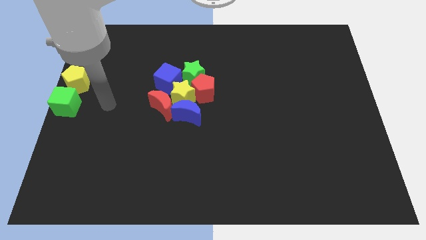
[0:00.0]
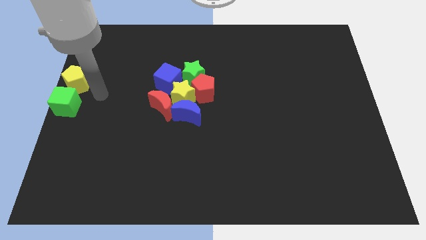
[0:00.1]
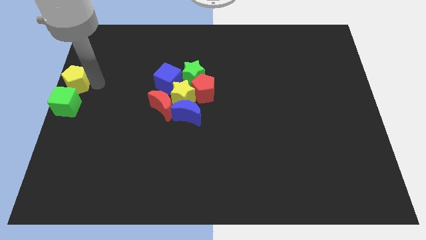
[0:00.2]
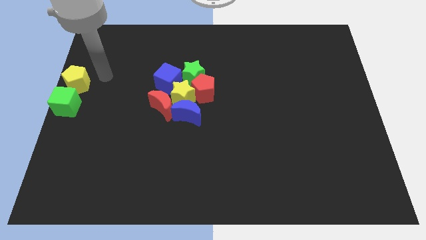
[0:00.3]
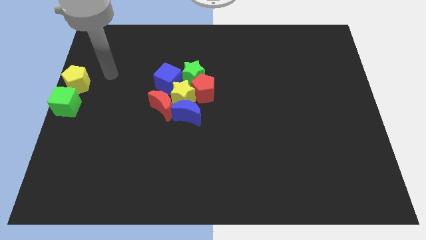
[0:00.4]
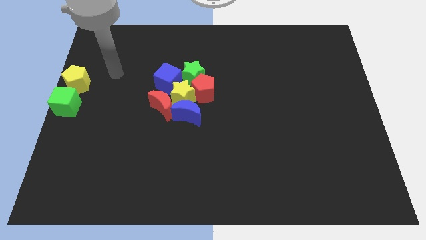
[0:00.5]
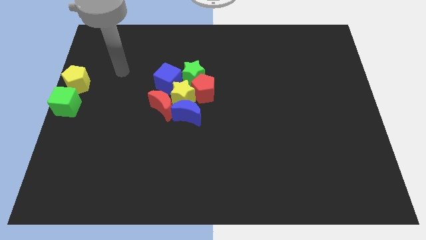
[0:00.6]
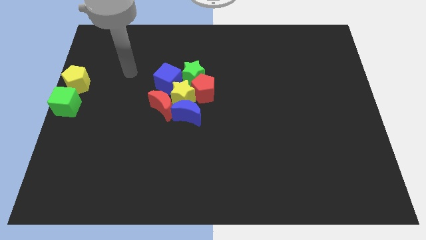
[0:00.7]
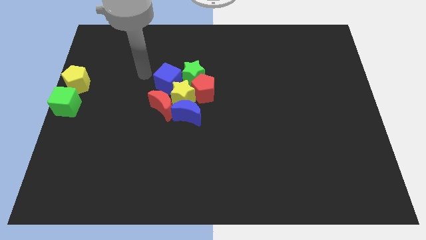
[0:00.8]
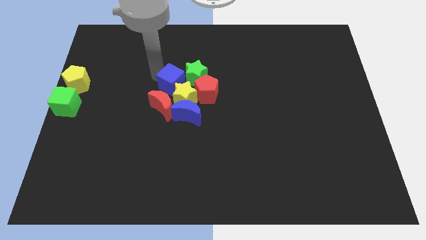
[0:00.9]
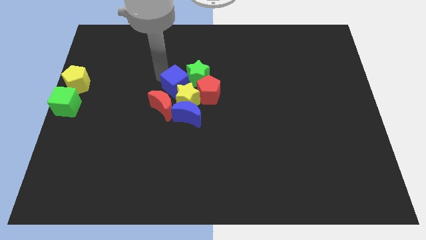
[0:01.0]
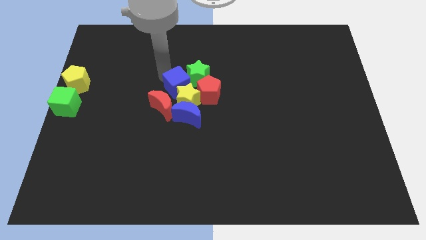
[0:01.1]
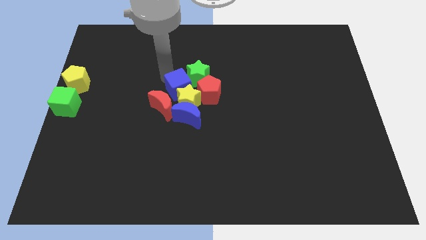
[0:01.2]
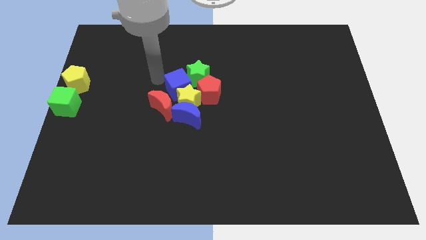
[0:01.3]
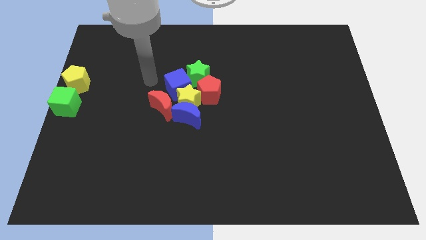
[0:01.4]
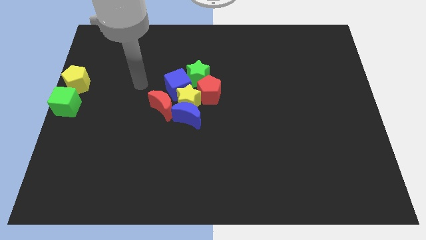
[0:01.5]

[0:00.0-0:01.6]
move your arm to the top of the blue cube

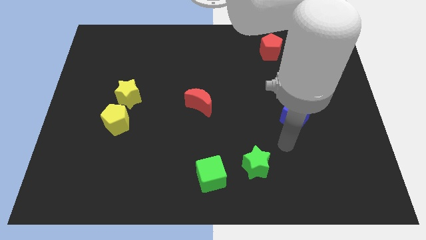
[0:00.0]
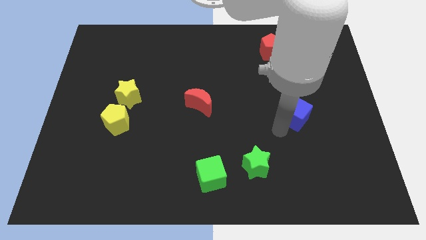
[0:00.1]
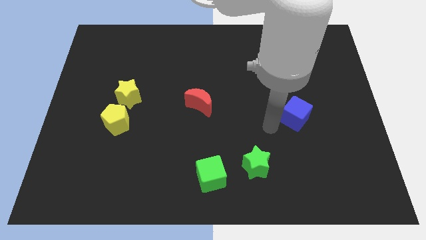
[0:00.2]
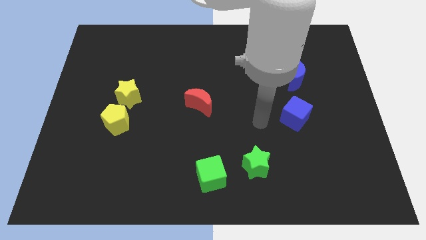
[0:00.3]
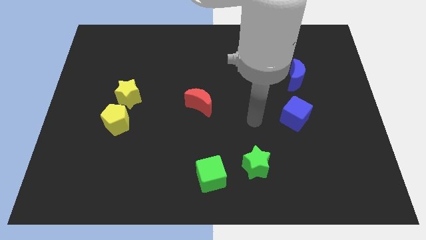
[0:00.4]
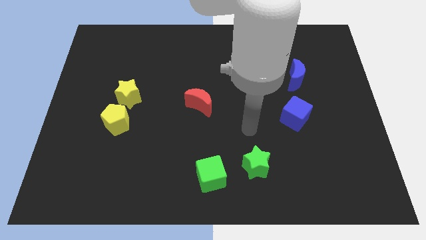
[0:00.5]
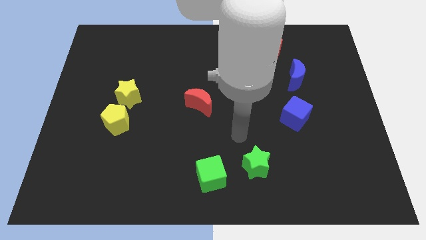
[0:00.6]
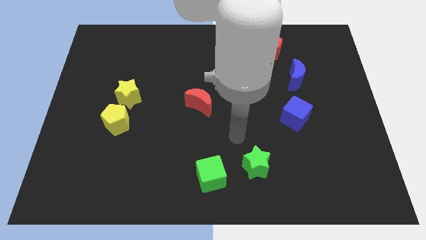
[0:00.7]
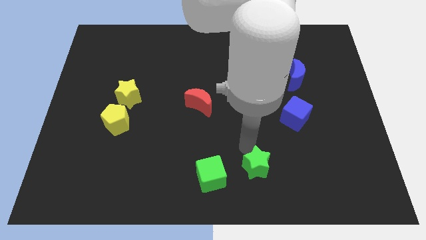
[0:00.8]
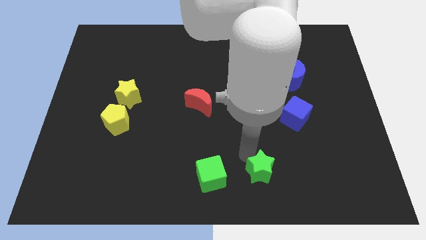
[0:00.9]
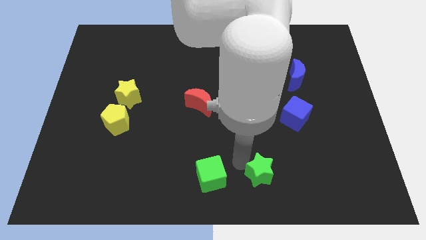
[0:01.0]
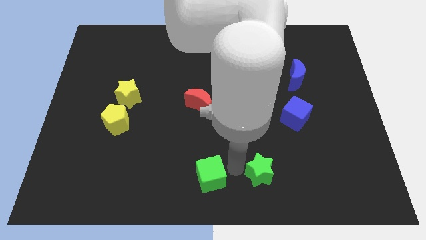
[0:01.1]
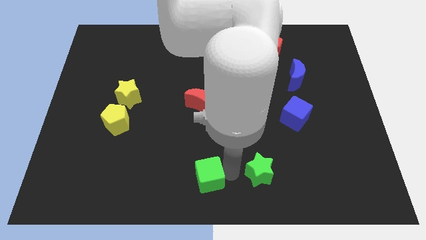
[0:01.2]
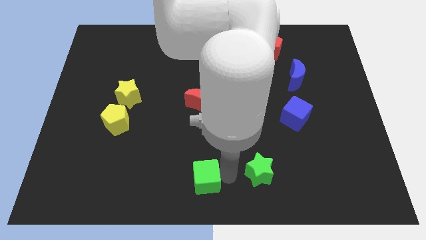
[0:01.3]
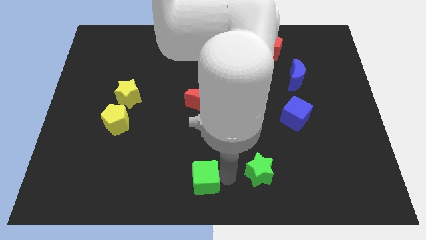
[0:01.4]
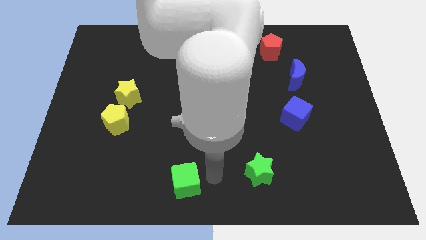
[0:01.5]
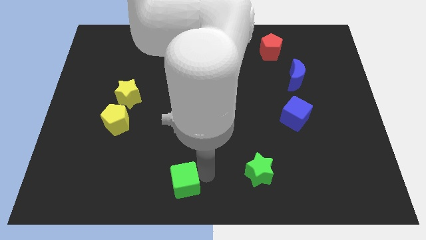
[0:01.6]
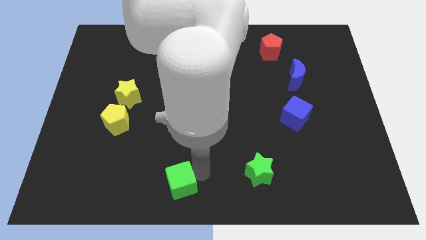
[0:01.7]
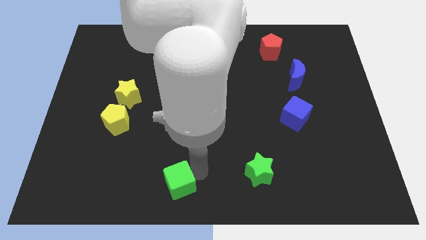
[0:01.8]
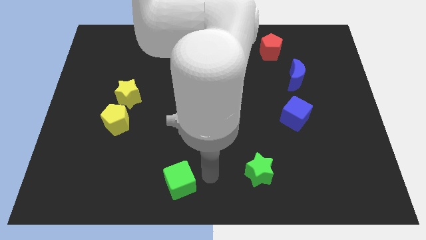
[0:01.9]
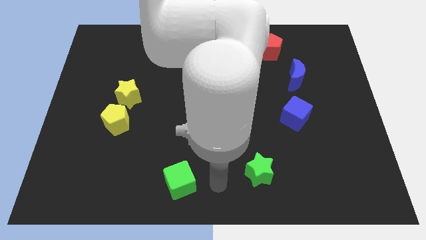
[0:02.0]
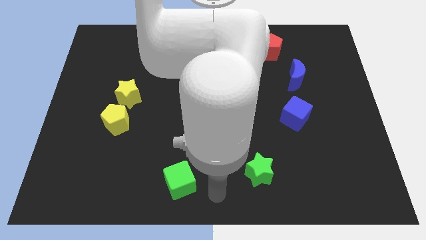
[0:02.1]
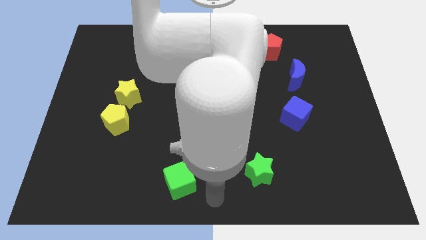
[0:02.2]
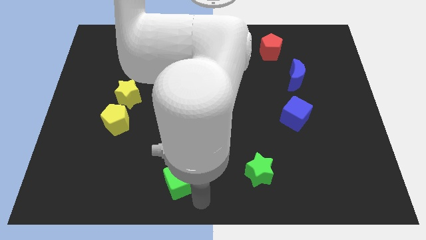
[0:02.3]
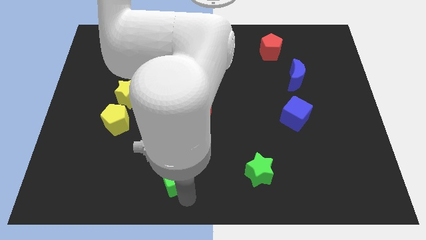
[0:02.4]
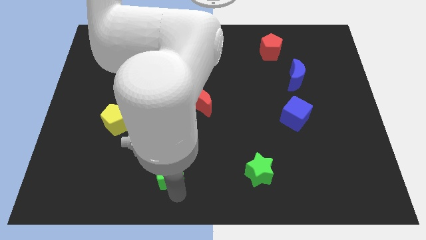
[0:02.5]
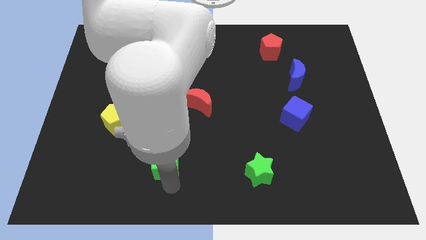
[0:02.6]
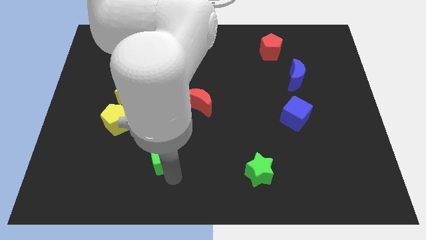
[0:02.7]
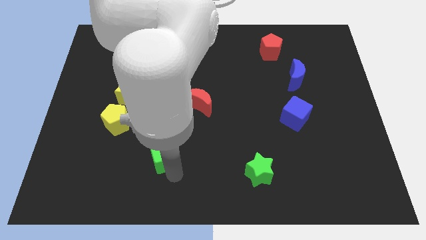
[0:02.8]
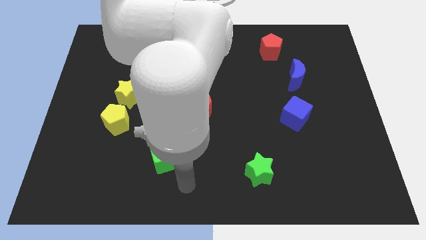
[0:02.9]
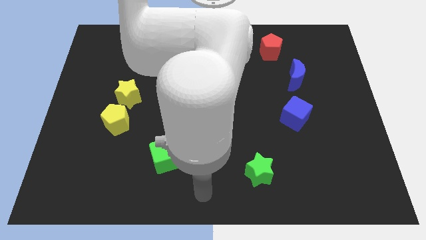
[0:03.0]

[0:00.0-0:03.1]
push the green cube to the left side of the green star

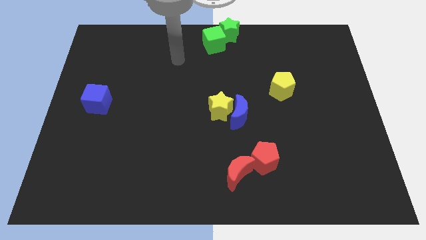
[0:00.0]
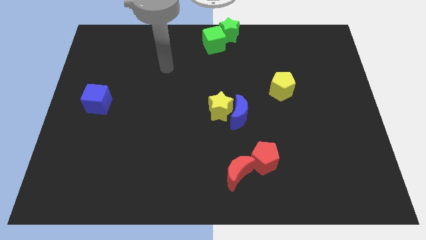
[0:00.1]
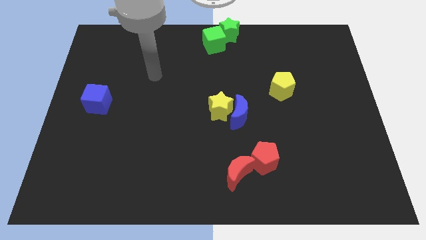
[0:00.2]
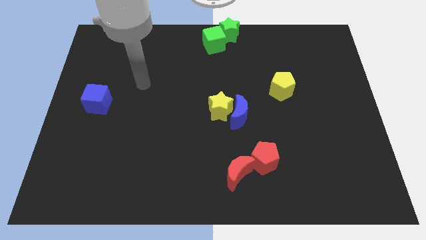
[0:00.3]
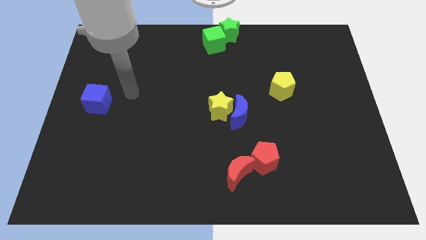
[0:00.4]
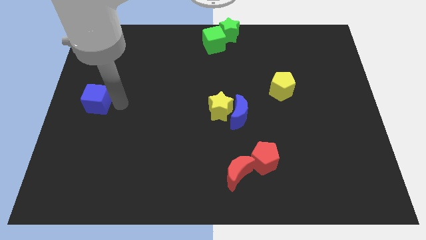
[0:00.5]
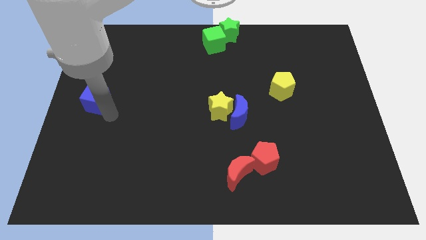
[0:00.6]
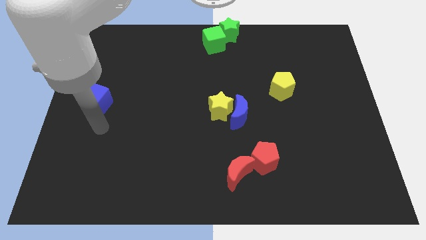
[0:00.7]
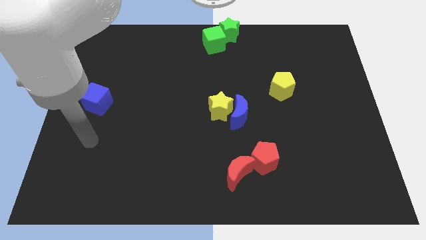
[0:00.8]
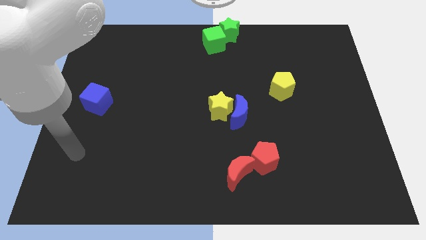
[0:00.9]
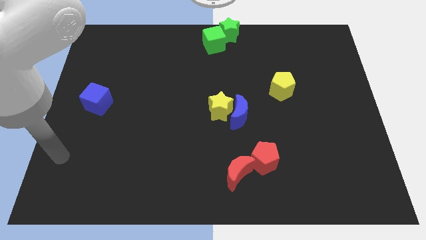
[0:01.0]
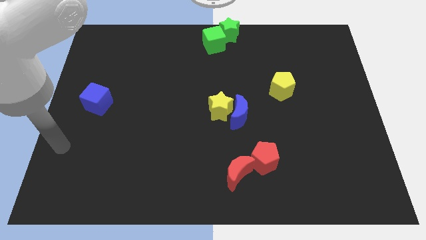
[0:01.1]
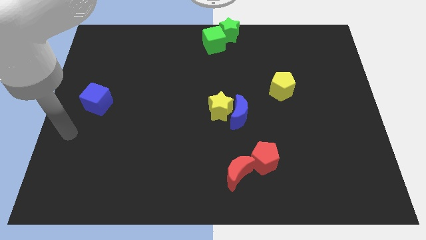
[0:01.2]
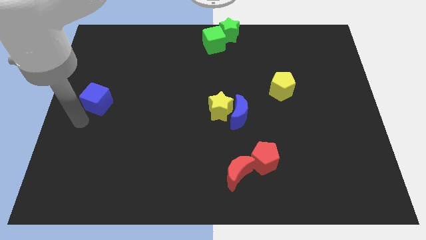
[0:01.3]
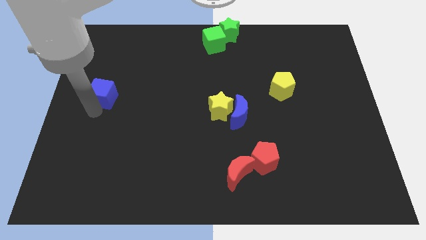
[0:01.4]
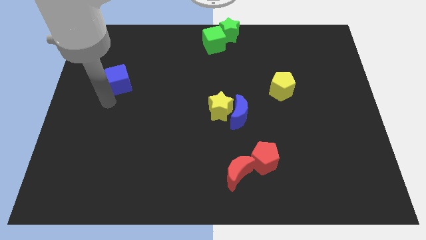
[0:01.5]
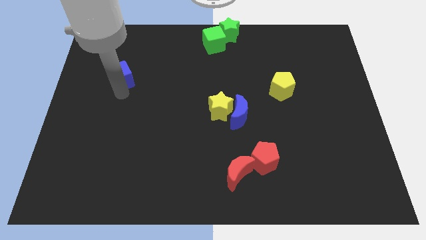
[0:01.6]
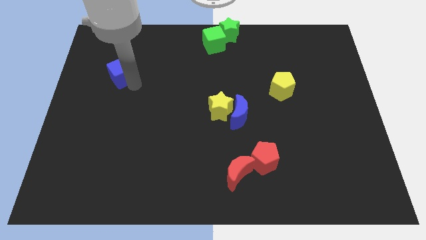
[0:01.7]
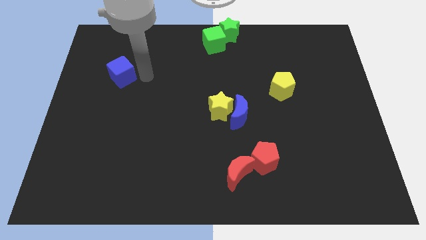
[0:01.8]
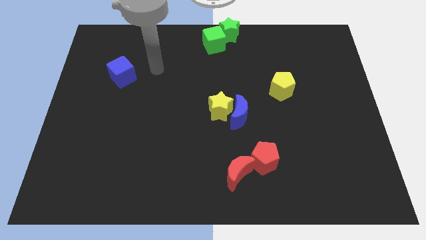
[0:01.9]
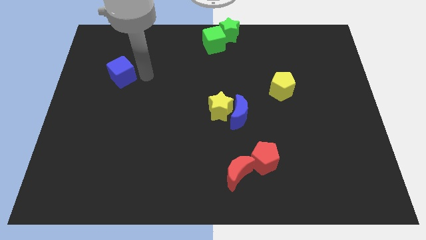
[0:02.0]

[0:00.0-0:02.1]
move blue cube towards the green cube

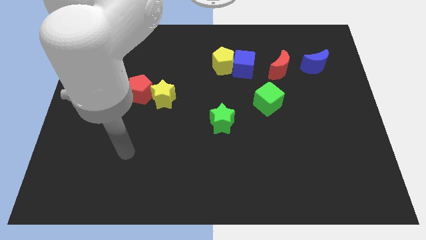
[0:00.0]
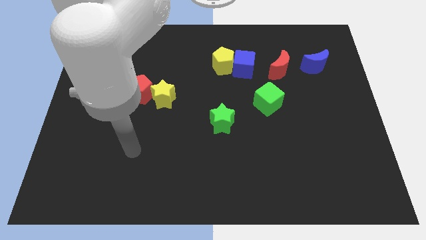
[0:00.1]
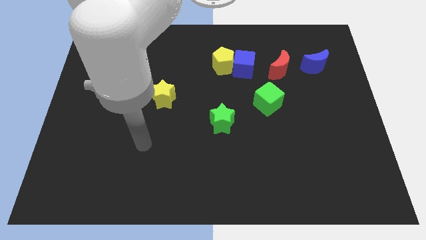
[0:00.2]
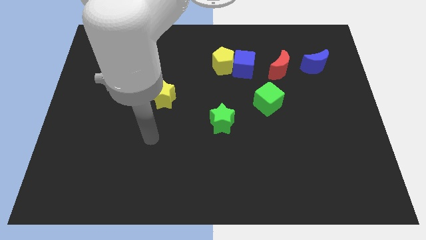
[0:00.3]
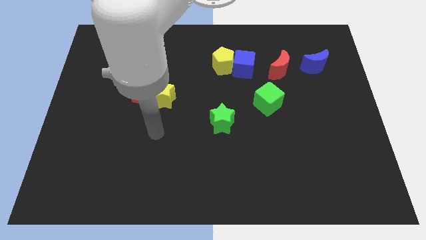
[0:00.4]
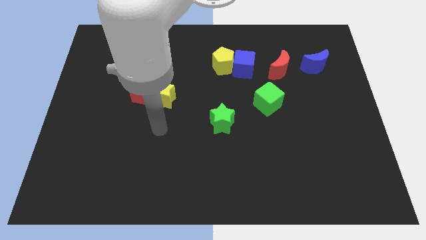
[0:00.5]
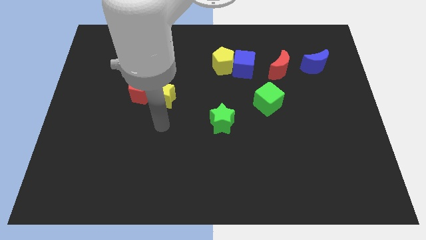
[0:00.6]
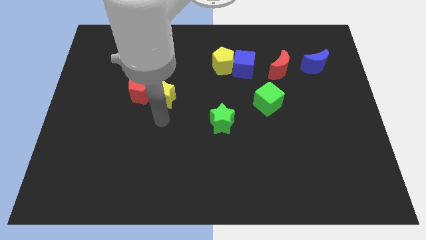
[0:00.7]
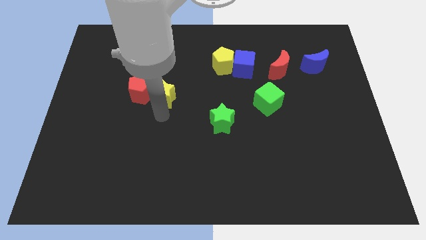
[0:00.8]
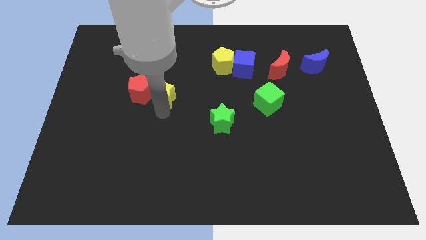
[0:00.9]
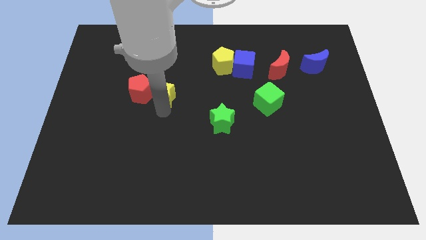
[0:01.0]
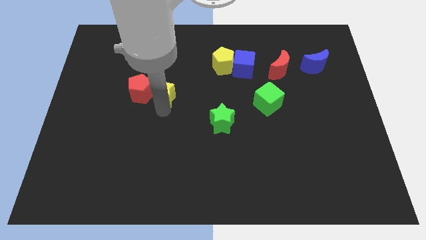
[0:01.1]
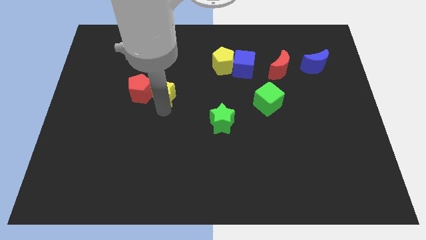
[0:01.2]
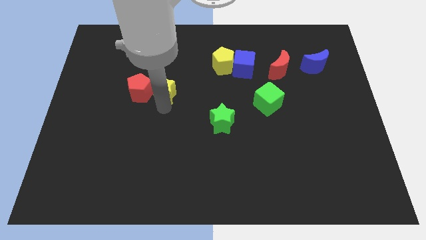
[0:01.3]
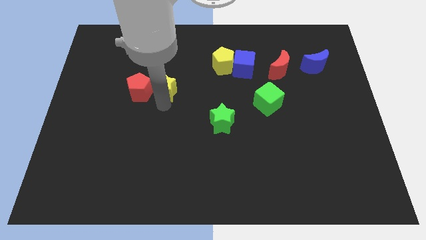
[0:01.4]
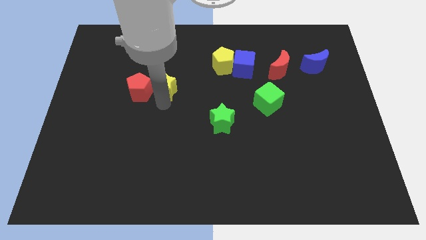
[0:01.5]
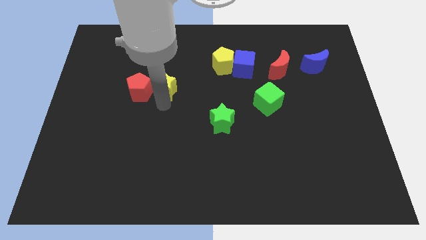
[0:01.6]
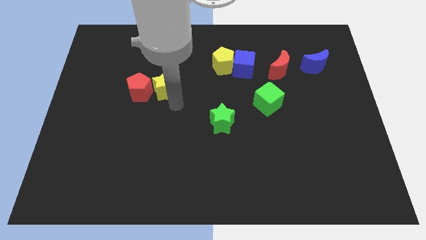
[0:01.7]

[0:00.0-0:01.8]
move the yellow star to the right side of the red pentagon

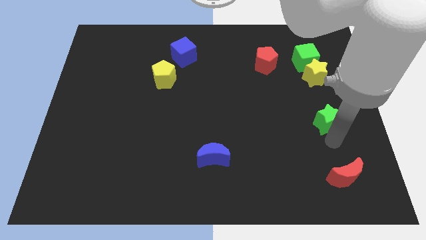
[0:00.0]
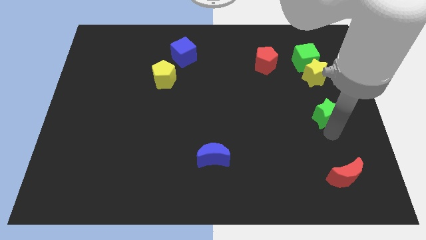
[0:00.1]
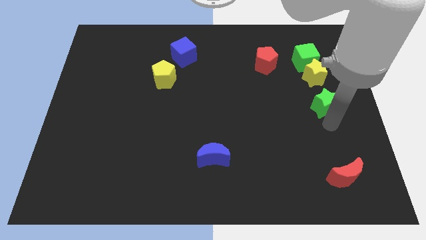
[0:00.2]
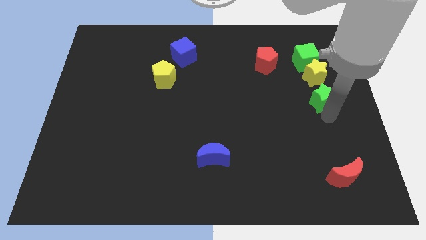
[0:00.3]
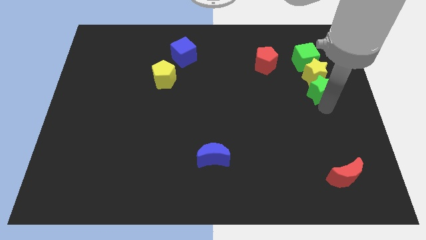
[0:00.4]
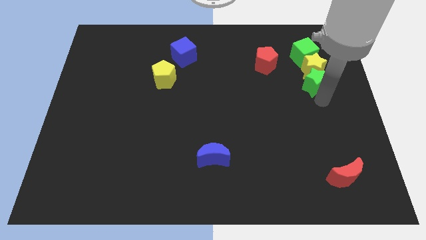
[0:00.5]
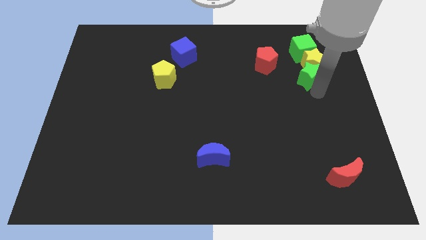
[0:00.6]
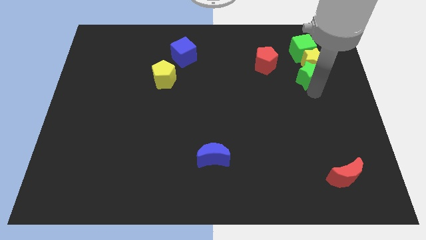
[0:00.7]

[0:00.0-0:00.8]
place the green star below the yellow star
